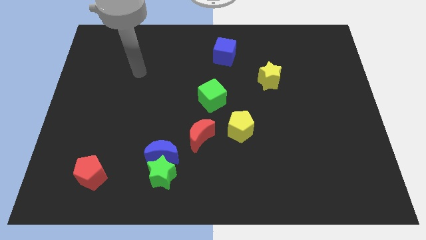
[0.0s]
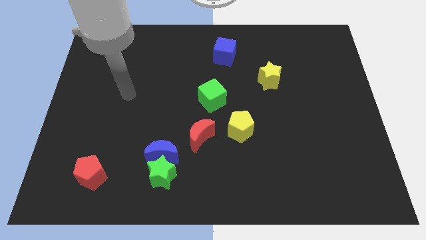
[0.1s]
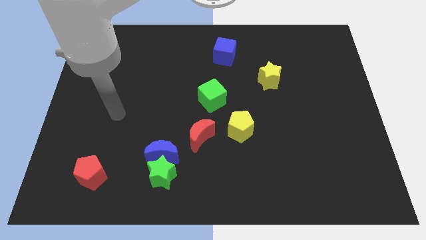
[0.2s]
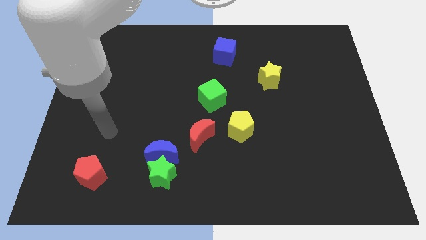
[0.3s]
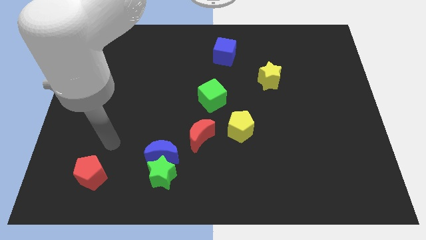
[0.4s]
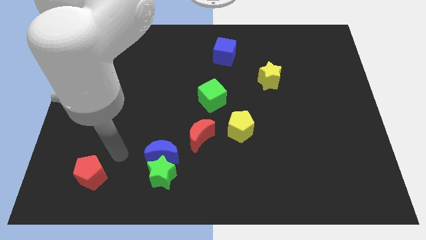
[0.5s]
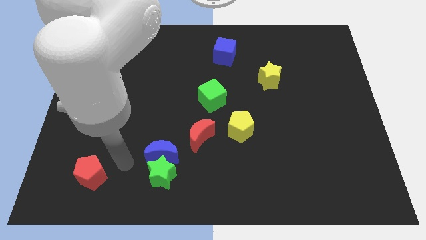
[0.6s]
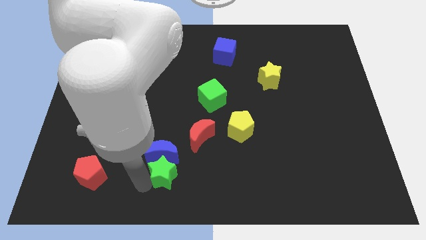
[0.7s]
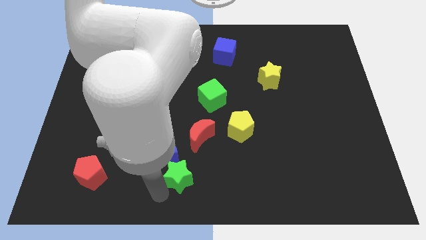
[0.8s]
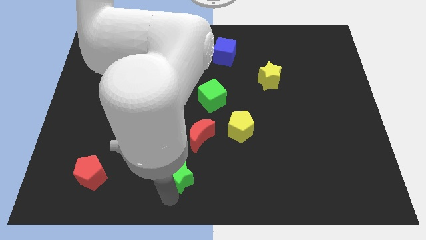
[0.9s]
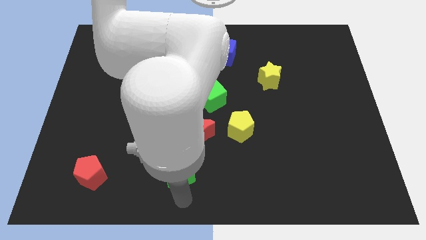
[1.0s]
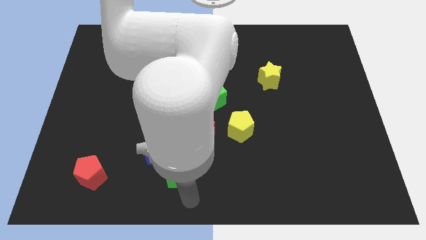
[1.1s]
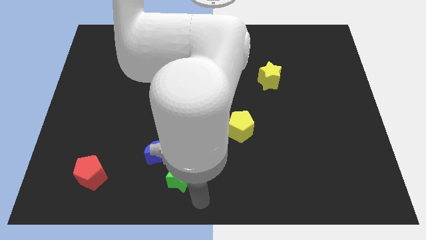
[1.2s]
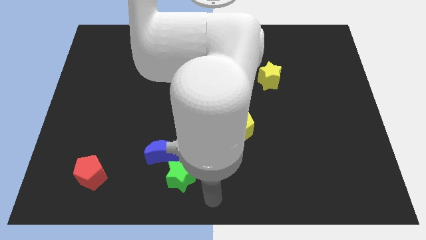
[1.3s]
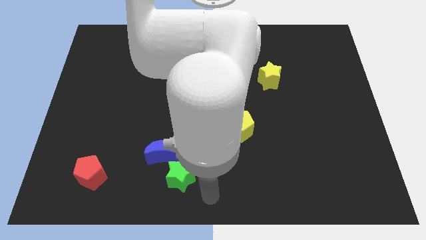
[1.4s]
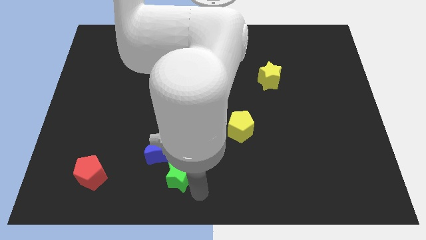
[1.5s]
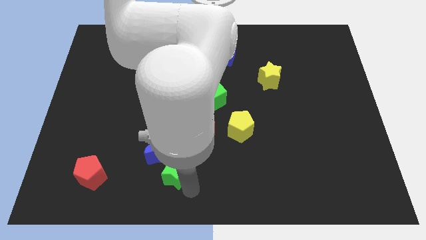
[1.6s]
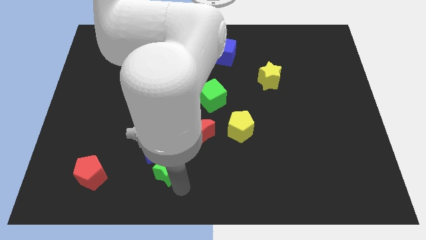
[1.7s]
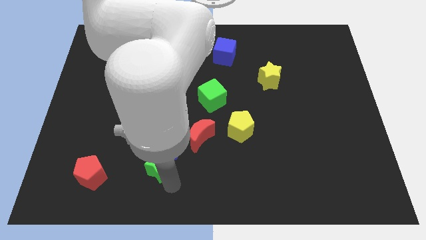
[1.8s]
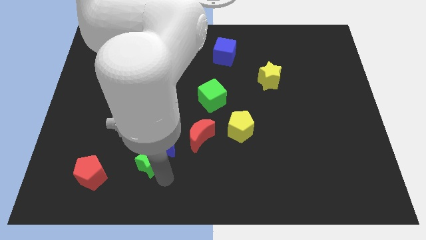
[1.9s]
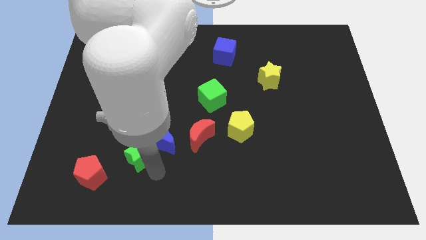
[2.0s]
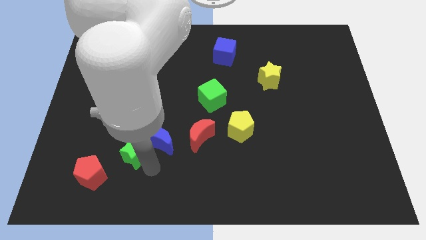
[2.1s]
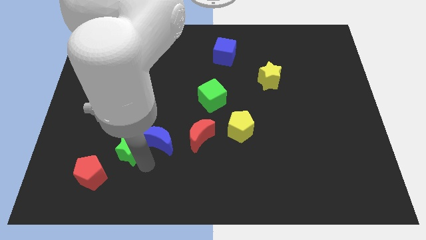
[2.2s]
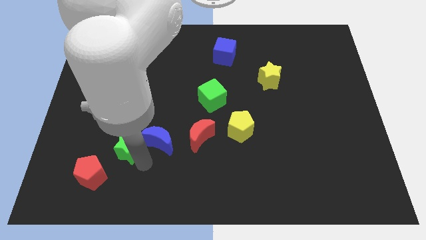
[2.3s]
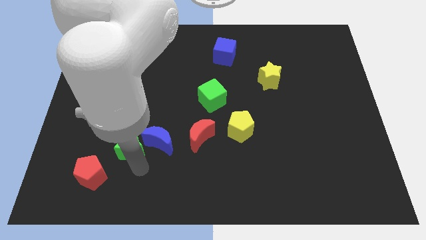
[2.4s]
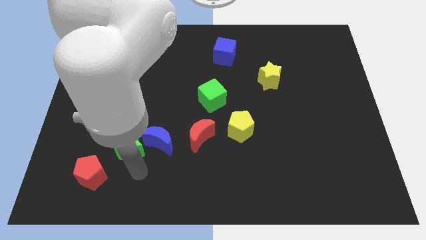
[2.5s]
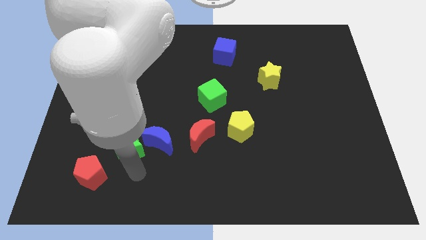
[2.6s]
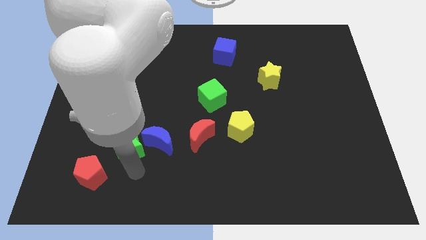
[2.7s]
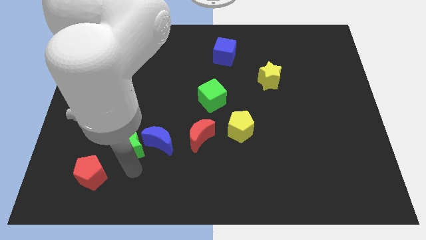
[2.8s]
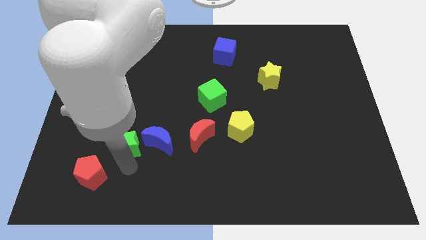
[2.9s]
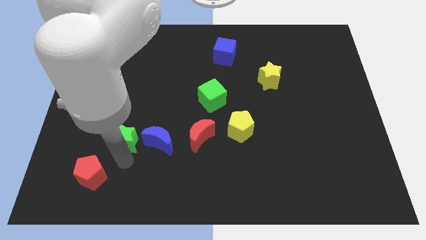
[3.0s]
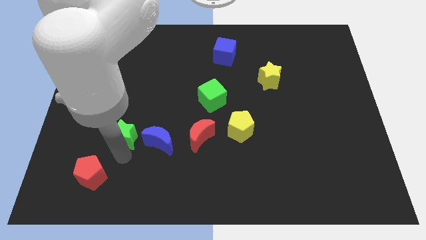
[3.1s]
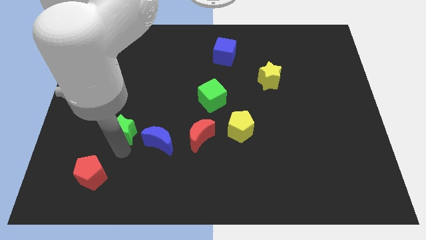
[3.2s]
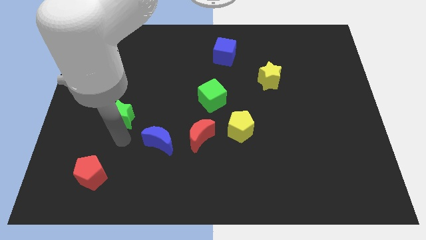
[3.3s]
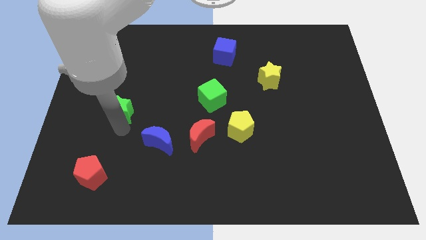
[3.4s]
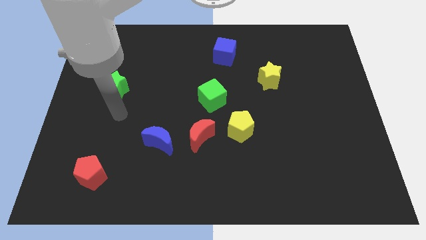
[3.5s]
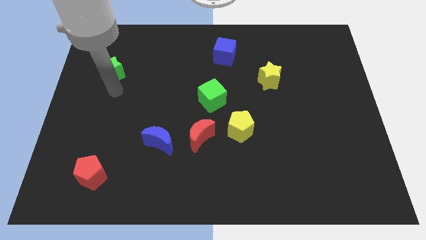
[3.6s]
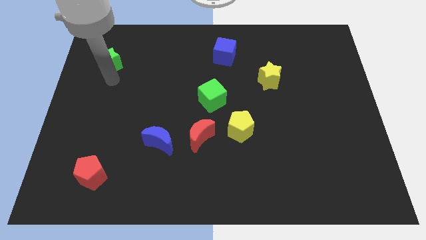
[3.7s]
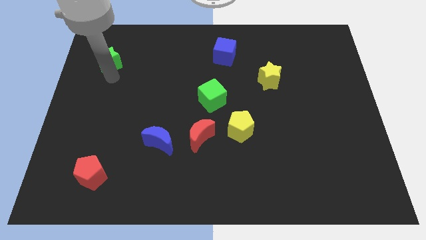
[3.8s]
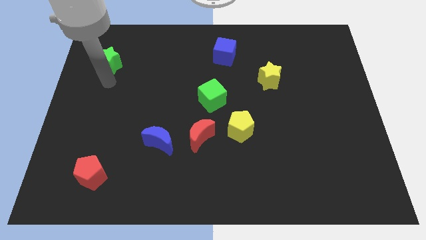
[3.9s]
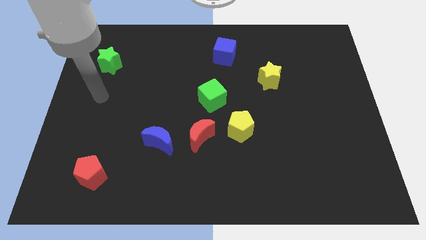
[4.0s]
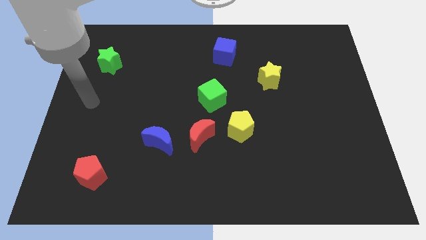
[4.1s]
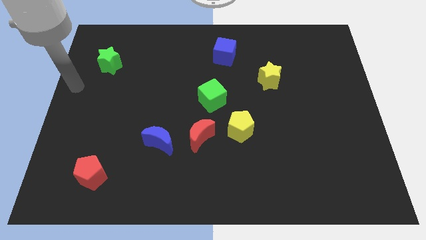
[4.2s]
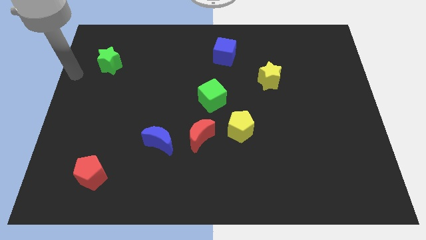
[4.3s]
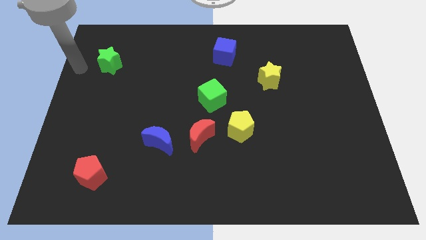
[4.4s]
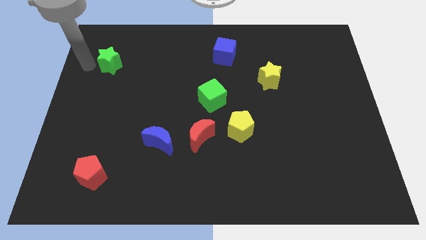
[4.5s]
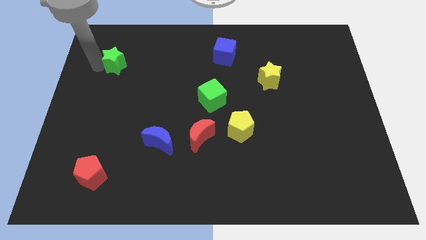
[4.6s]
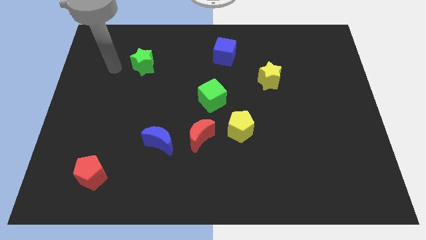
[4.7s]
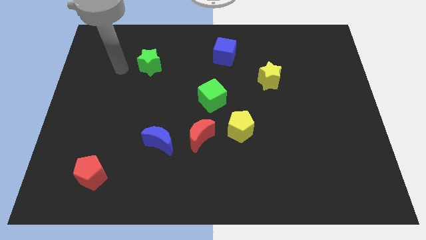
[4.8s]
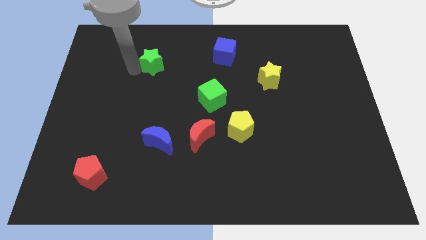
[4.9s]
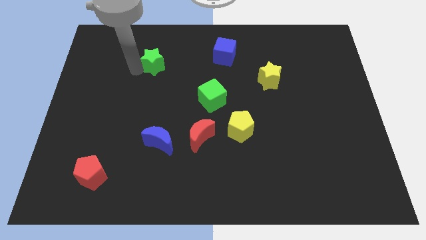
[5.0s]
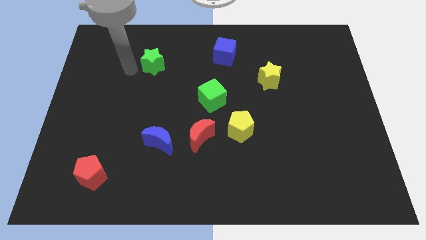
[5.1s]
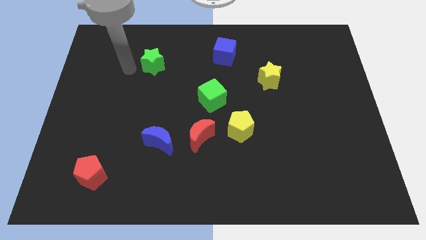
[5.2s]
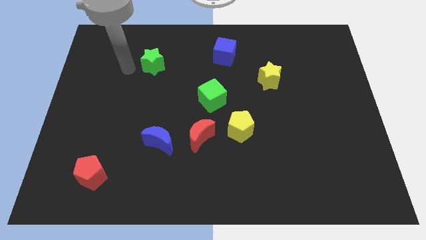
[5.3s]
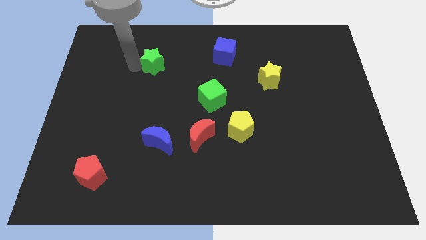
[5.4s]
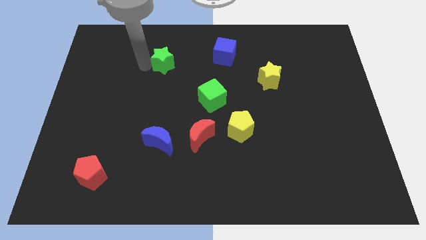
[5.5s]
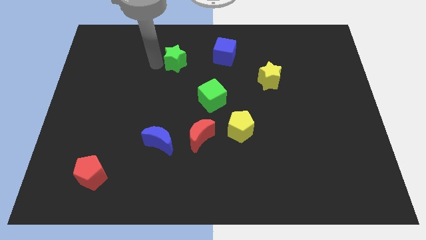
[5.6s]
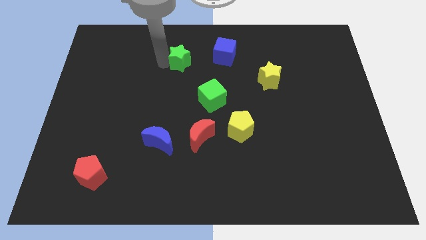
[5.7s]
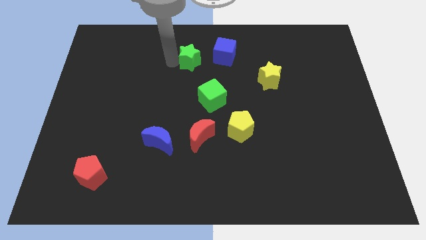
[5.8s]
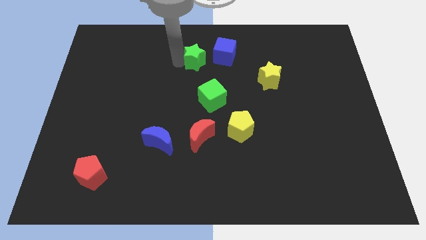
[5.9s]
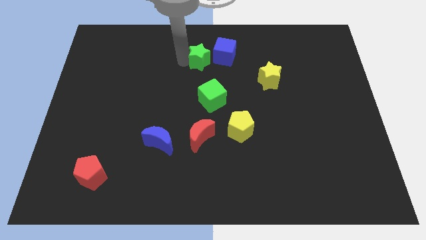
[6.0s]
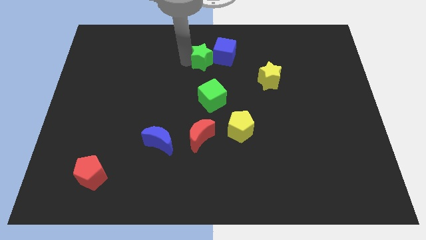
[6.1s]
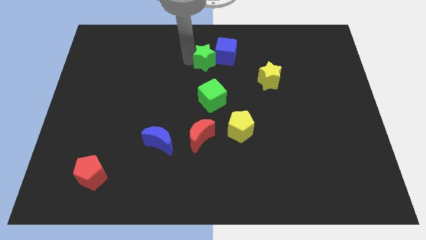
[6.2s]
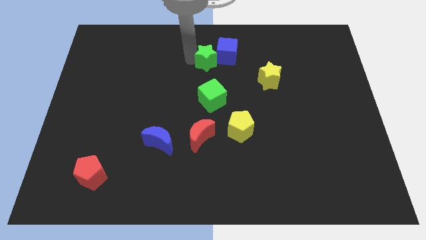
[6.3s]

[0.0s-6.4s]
put the green star close to the blue cube

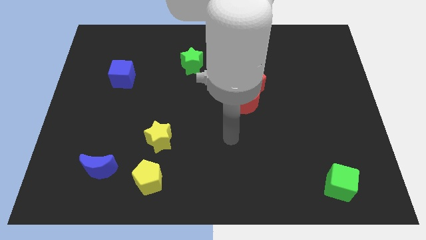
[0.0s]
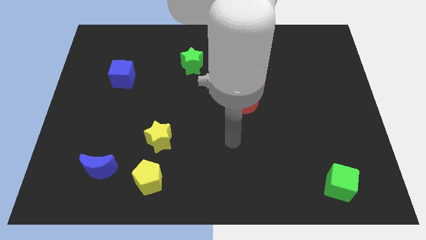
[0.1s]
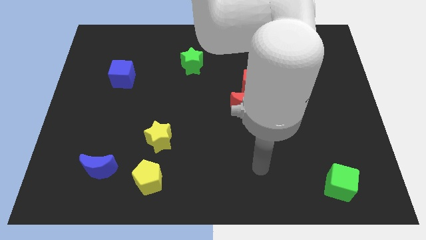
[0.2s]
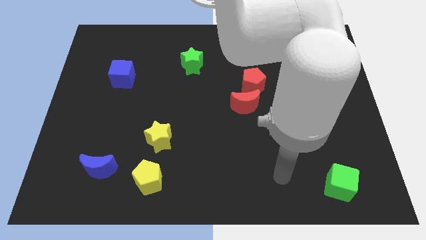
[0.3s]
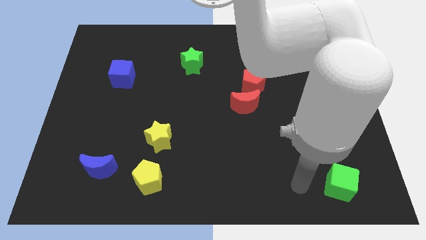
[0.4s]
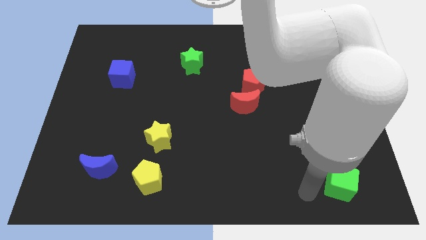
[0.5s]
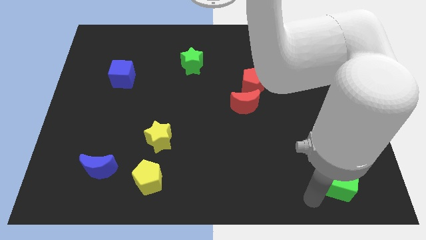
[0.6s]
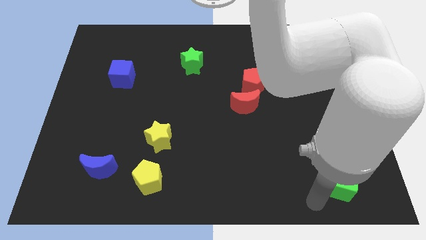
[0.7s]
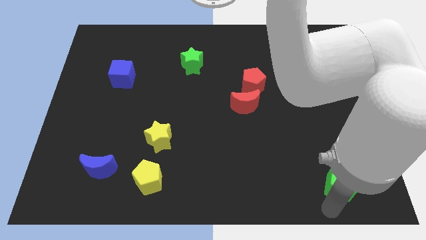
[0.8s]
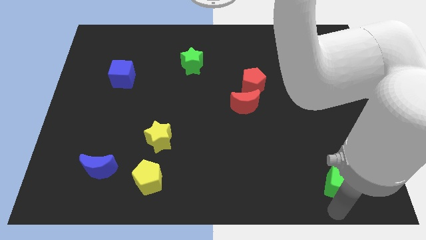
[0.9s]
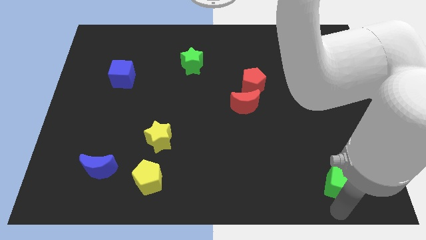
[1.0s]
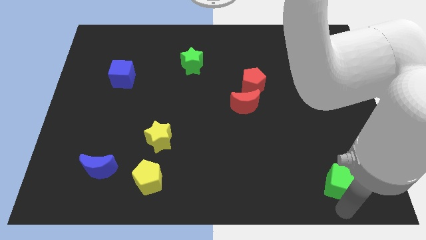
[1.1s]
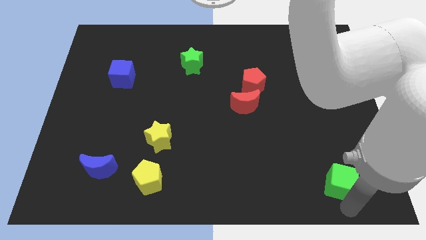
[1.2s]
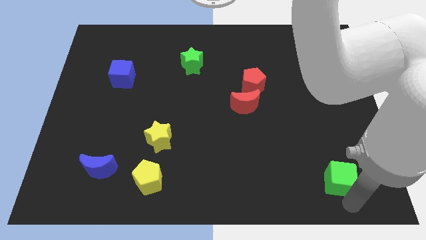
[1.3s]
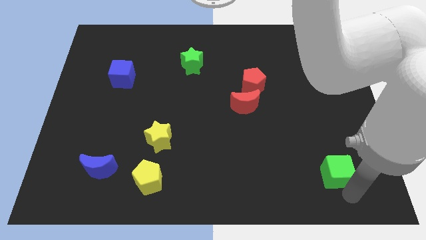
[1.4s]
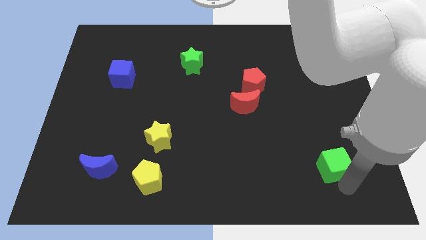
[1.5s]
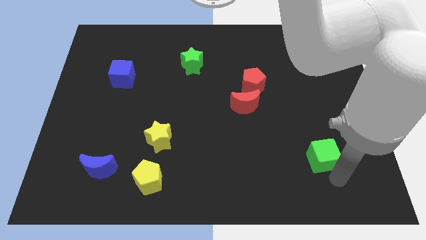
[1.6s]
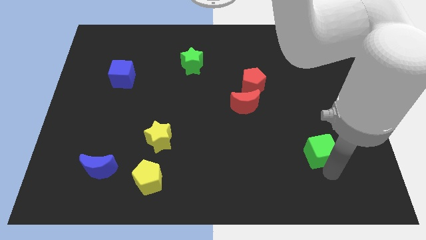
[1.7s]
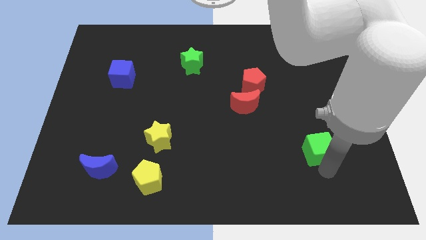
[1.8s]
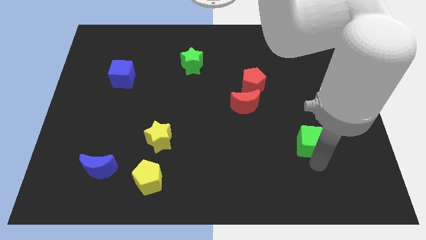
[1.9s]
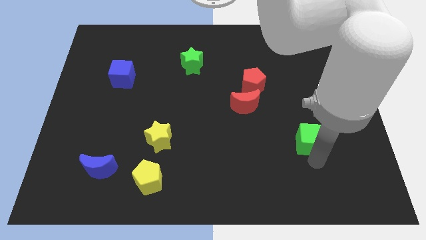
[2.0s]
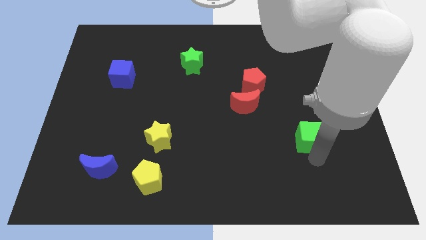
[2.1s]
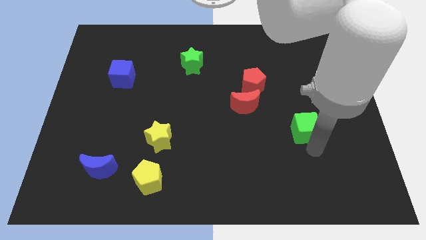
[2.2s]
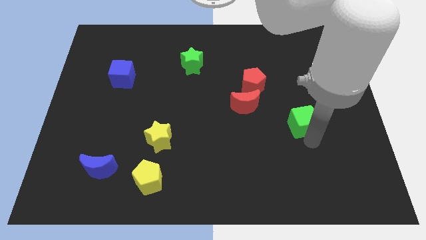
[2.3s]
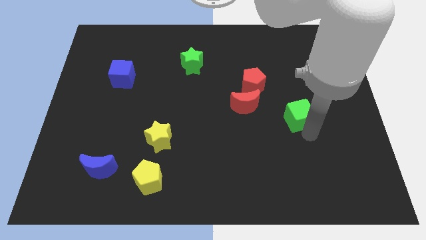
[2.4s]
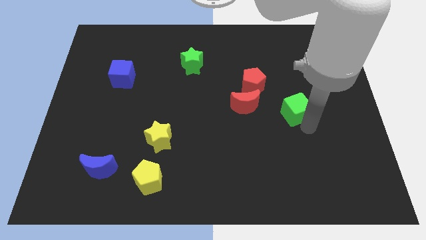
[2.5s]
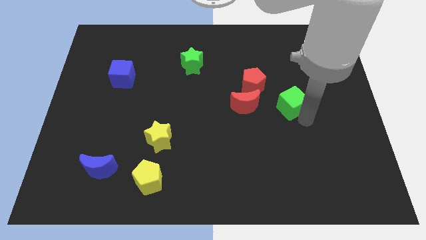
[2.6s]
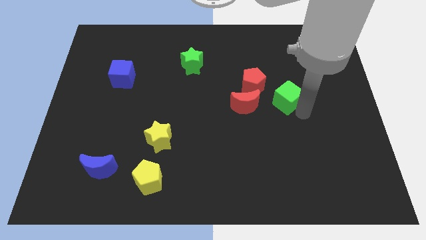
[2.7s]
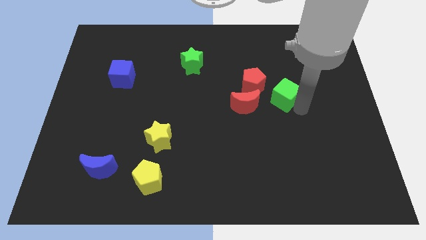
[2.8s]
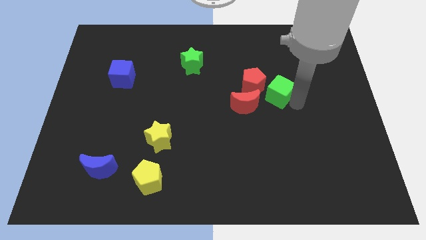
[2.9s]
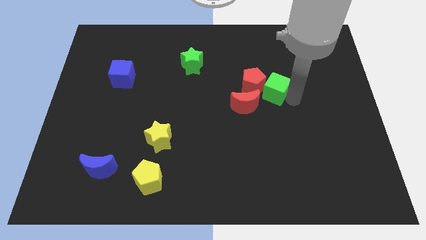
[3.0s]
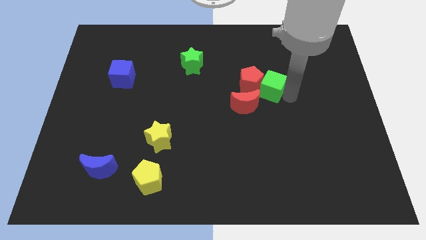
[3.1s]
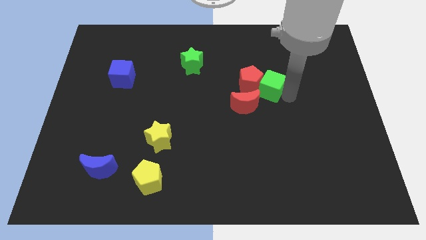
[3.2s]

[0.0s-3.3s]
slide the green cube to the red pentagon
